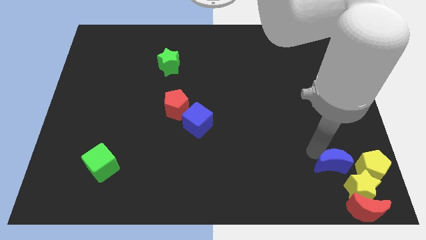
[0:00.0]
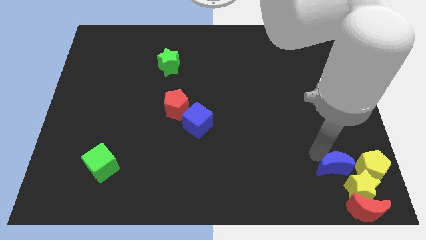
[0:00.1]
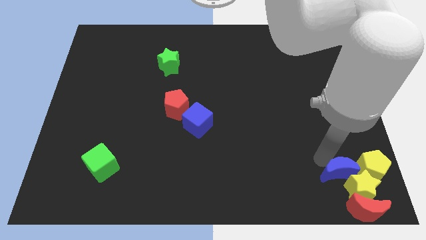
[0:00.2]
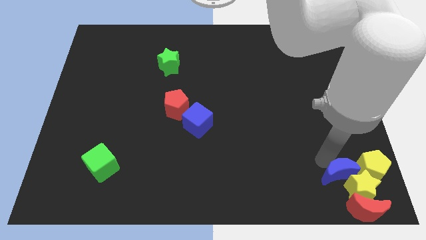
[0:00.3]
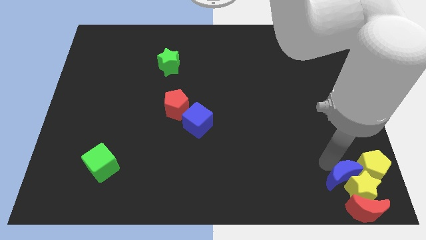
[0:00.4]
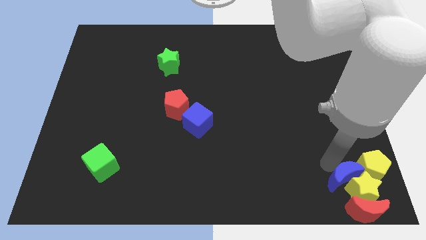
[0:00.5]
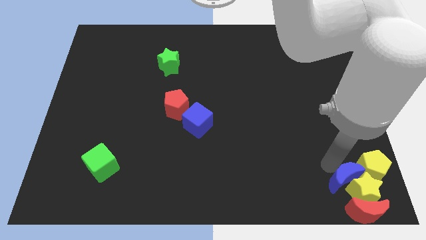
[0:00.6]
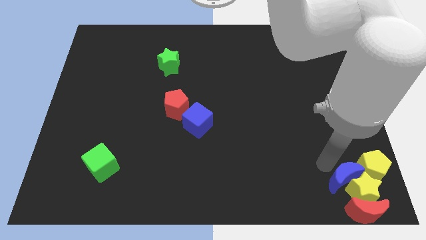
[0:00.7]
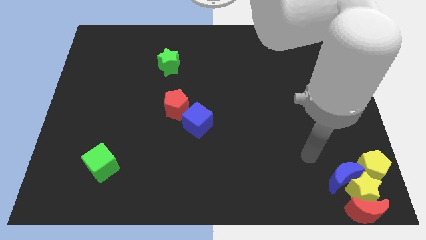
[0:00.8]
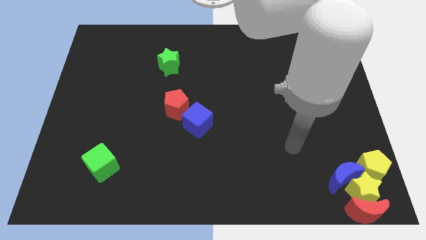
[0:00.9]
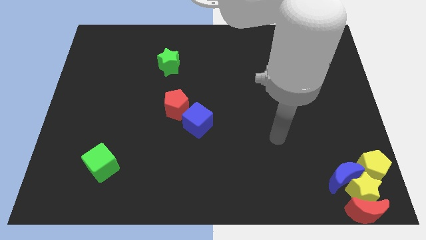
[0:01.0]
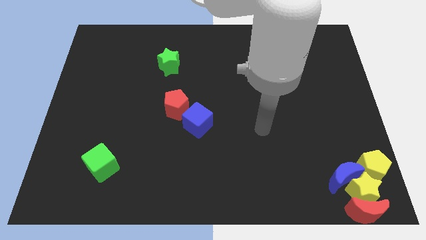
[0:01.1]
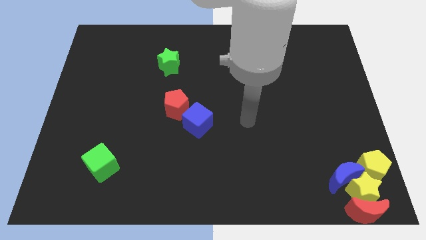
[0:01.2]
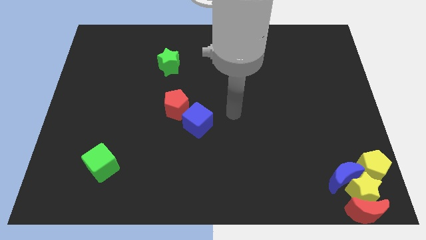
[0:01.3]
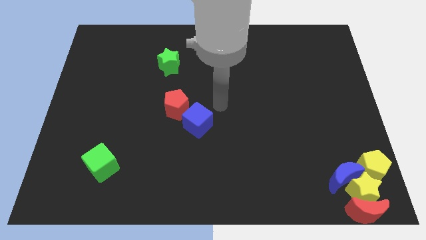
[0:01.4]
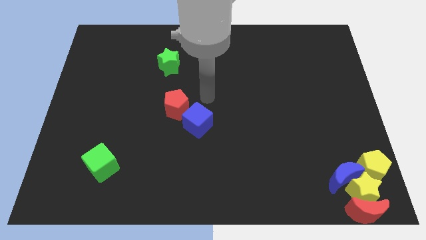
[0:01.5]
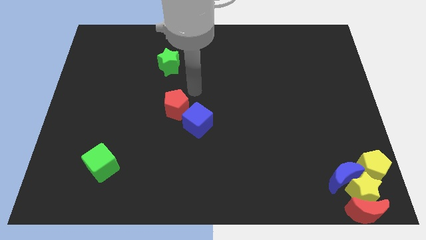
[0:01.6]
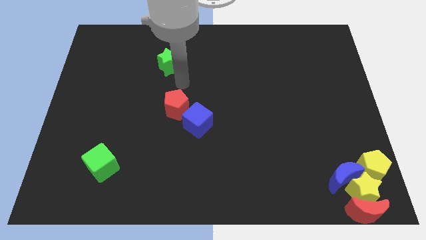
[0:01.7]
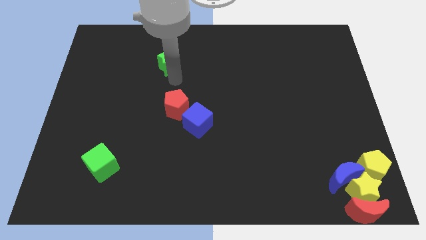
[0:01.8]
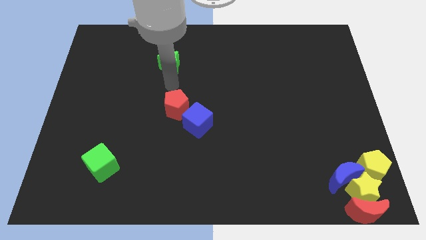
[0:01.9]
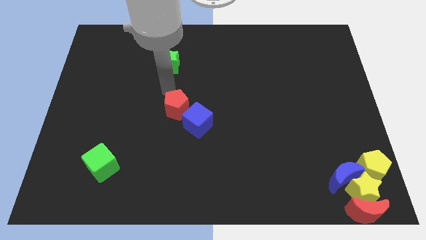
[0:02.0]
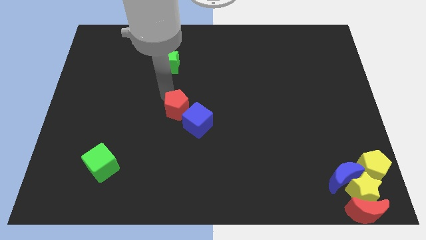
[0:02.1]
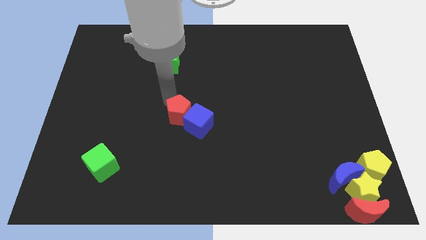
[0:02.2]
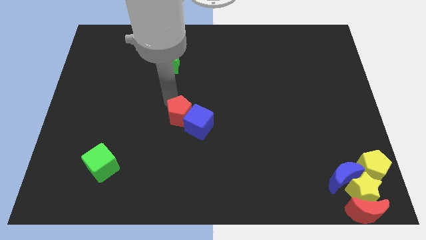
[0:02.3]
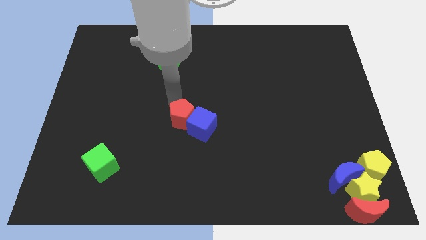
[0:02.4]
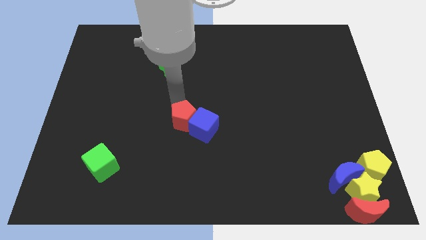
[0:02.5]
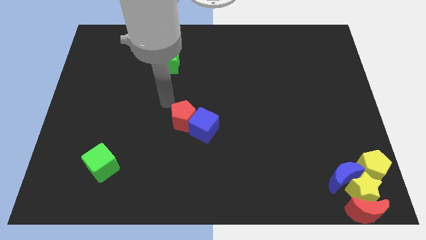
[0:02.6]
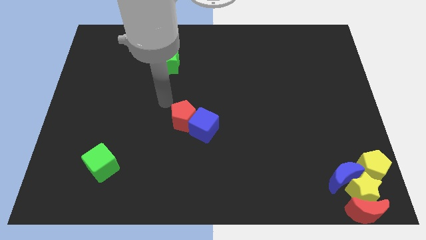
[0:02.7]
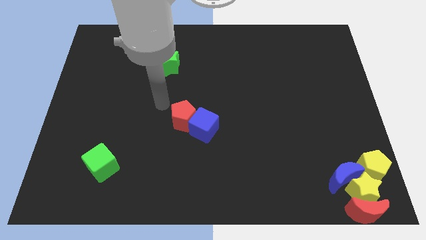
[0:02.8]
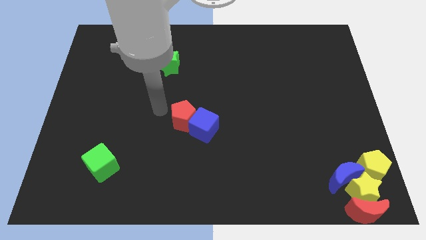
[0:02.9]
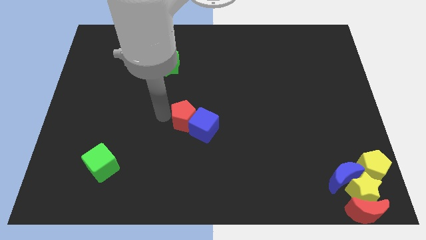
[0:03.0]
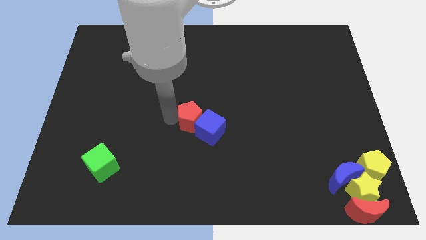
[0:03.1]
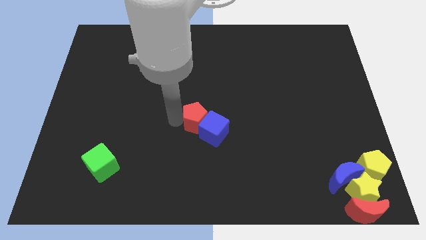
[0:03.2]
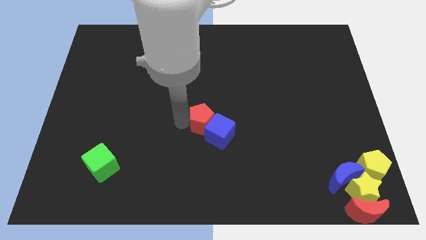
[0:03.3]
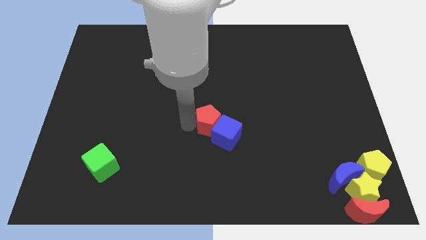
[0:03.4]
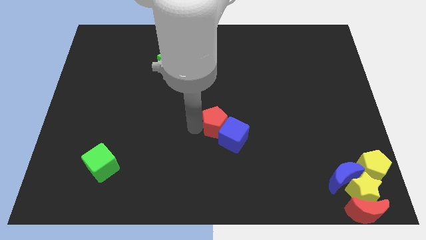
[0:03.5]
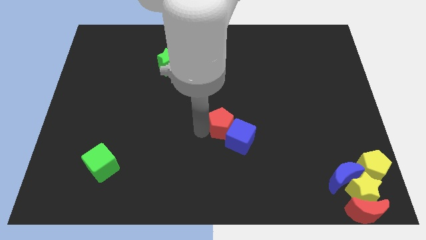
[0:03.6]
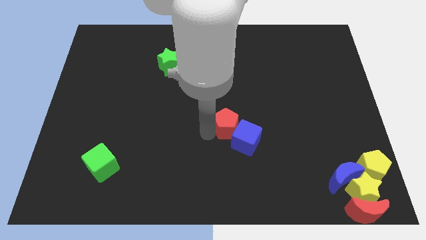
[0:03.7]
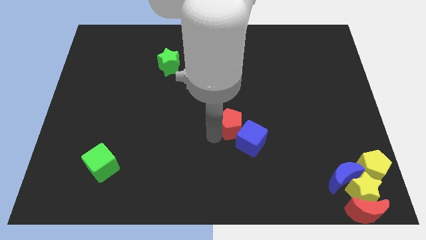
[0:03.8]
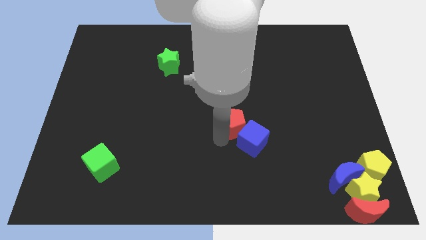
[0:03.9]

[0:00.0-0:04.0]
push the blue cube along with the red pentagon towards the bottom right

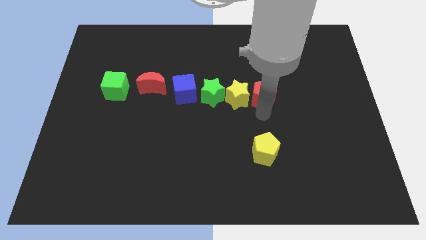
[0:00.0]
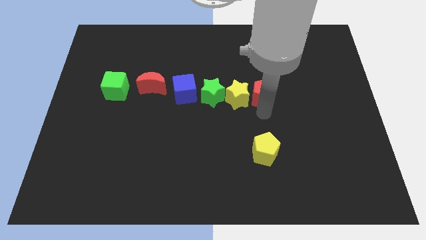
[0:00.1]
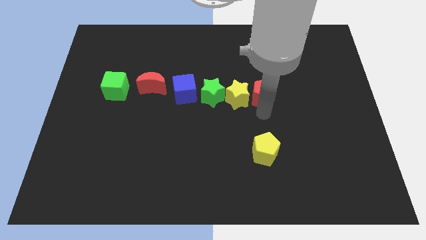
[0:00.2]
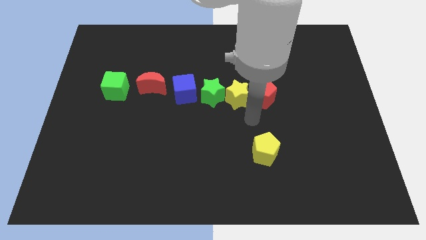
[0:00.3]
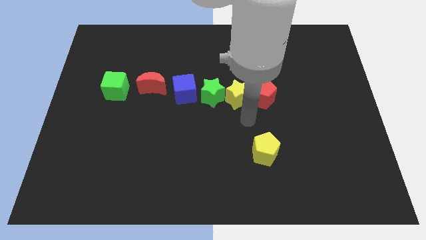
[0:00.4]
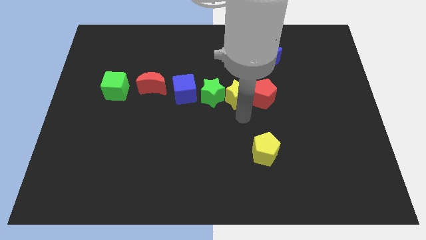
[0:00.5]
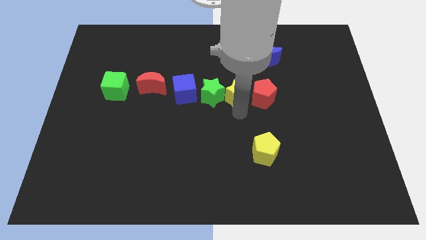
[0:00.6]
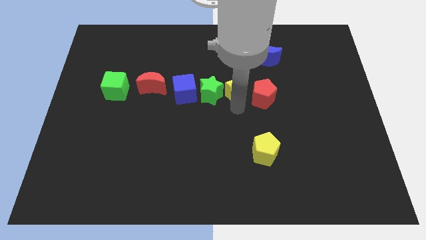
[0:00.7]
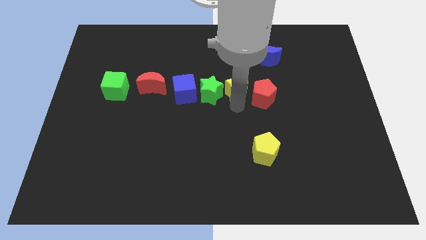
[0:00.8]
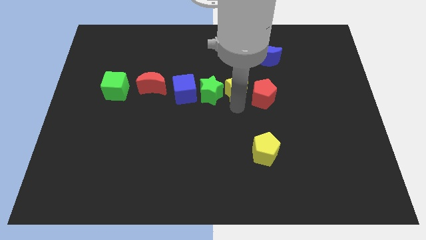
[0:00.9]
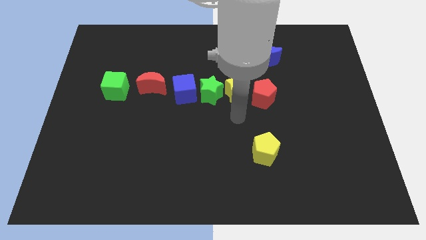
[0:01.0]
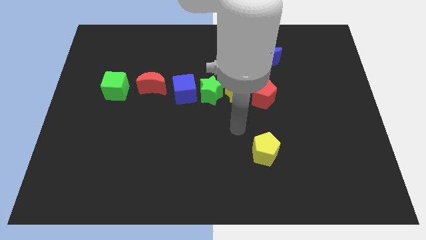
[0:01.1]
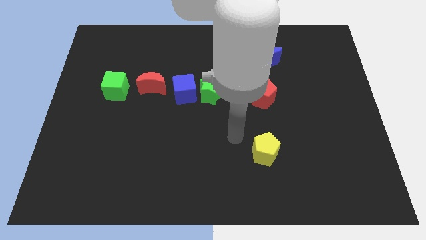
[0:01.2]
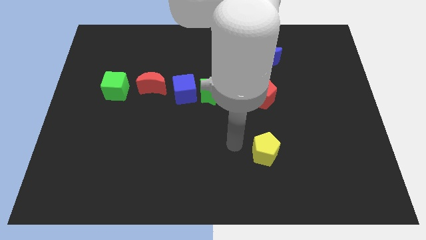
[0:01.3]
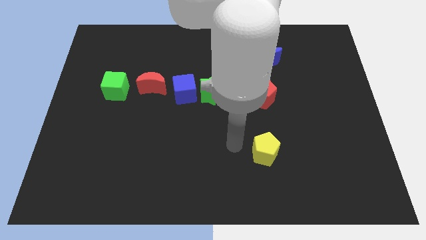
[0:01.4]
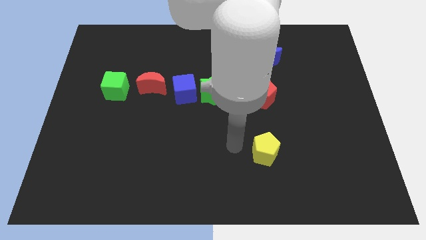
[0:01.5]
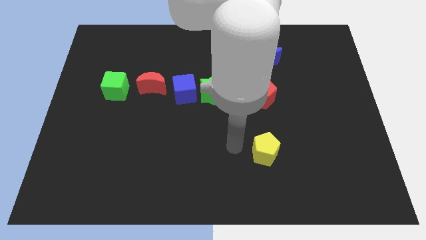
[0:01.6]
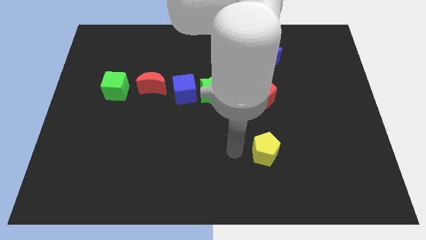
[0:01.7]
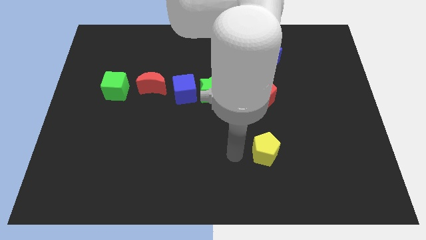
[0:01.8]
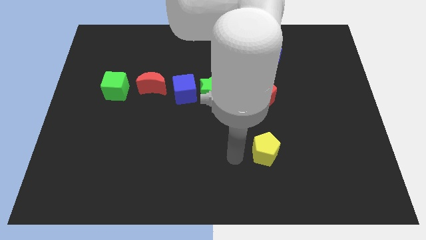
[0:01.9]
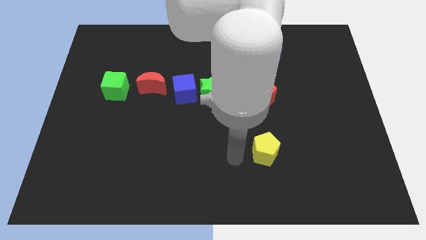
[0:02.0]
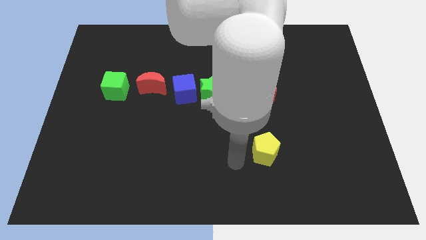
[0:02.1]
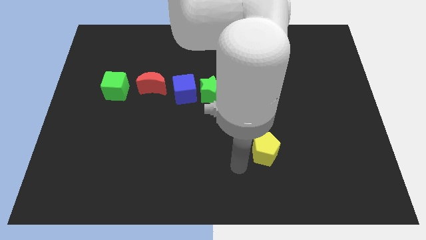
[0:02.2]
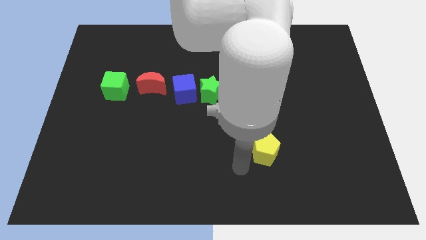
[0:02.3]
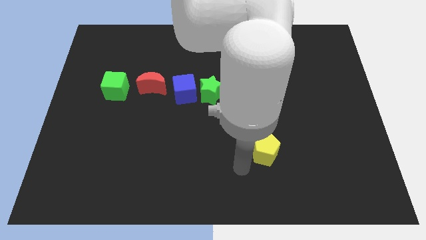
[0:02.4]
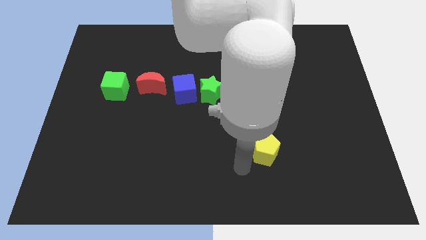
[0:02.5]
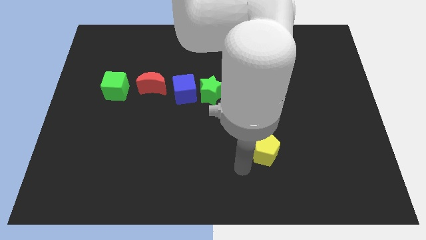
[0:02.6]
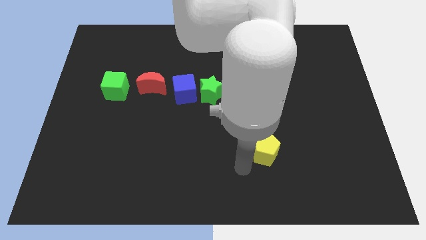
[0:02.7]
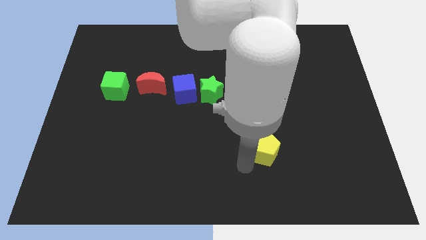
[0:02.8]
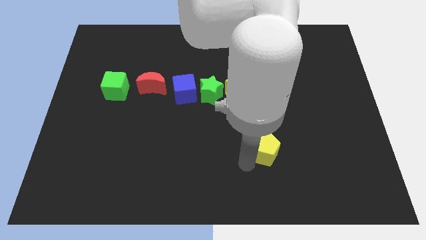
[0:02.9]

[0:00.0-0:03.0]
move the yellow star slightly upwards

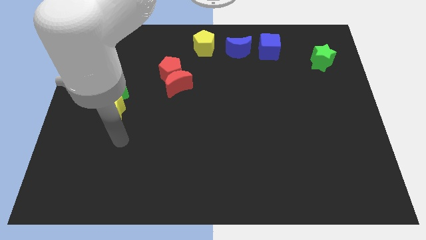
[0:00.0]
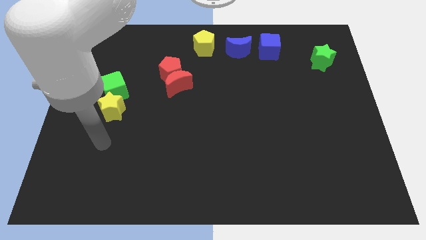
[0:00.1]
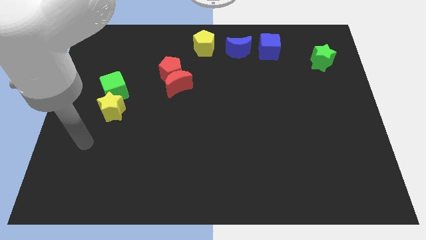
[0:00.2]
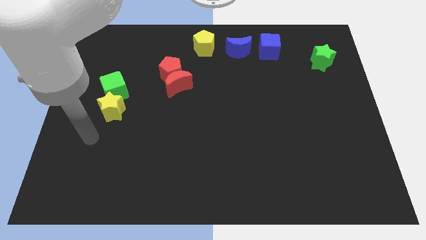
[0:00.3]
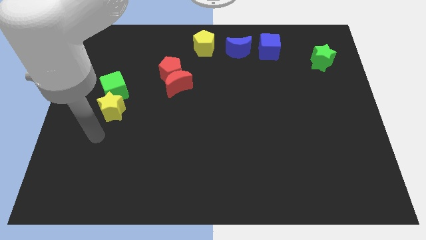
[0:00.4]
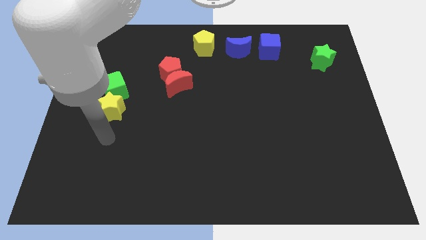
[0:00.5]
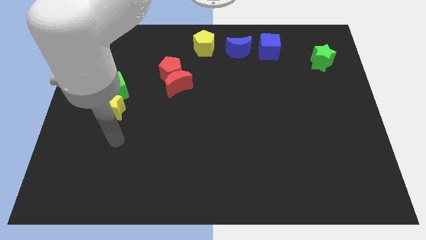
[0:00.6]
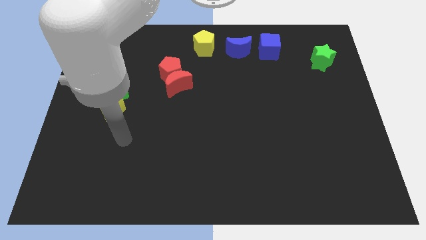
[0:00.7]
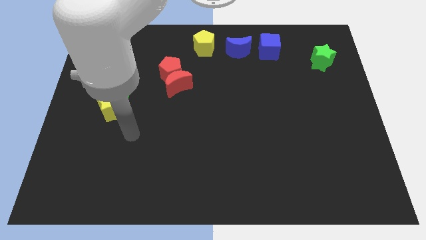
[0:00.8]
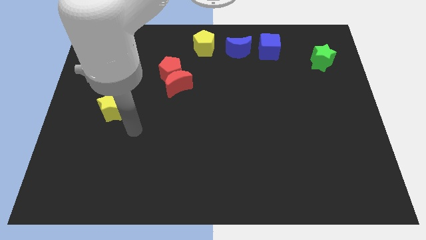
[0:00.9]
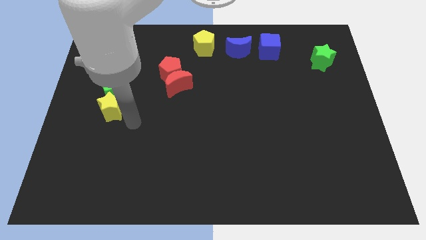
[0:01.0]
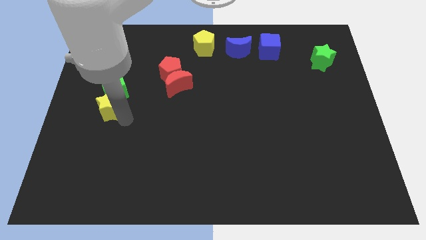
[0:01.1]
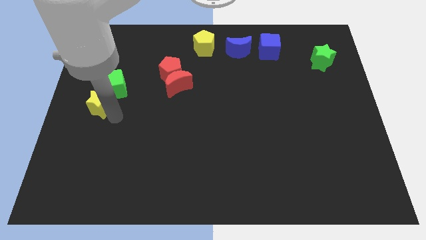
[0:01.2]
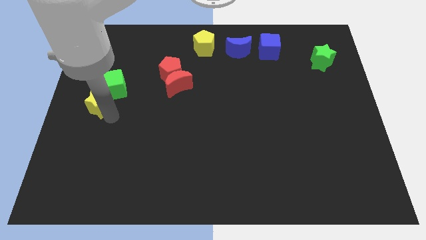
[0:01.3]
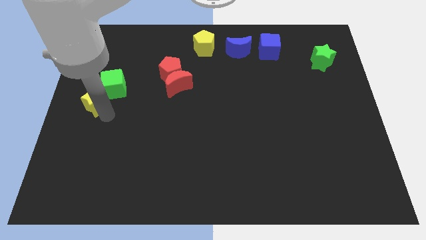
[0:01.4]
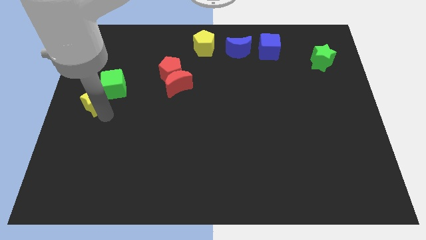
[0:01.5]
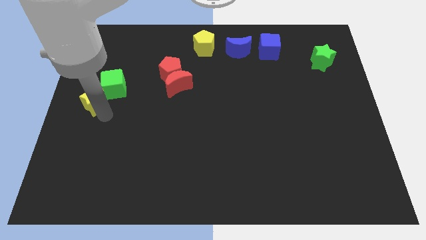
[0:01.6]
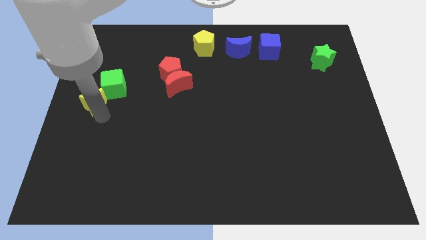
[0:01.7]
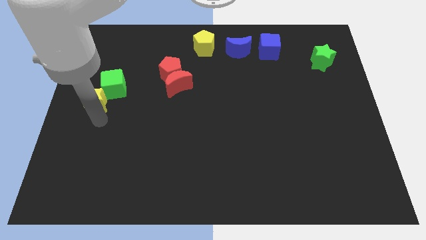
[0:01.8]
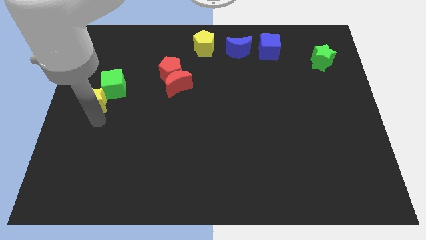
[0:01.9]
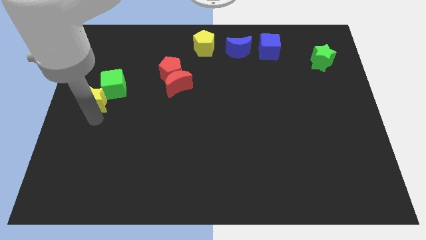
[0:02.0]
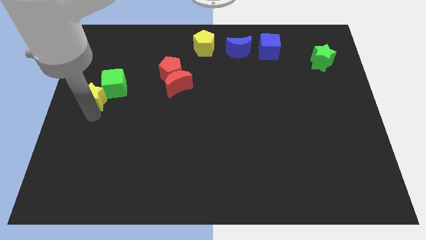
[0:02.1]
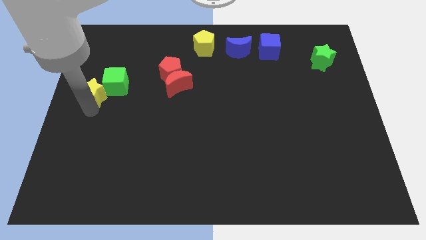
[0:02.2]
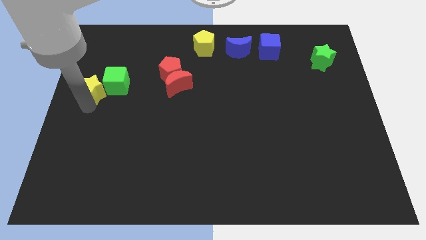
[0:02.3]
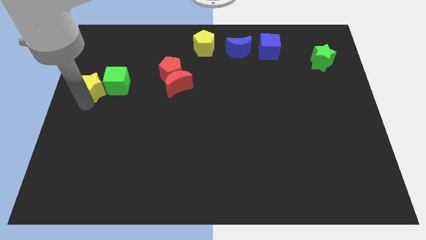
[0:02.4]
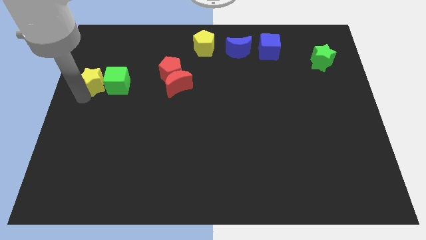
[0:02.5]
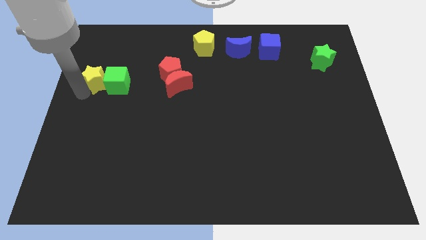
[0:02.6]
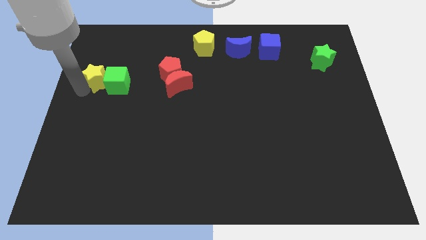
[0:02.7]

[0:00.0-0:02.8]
move the yellow star to the left of the green cube
